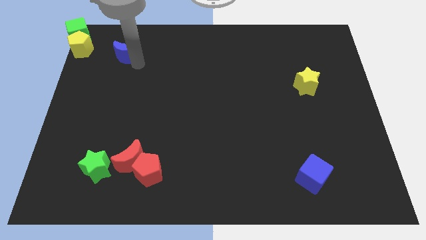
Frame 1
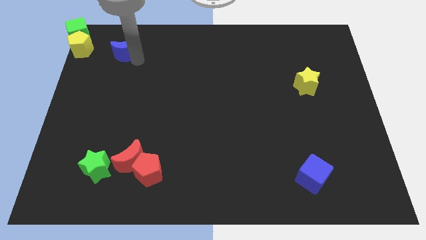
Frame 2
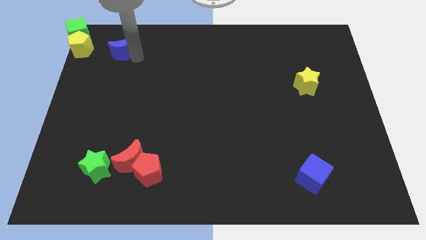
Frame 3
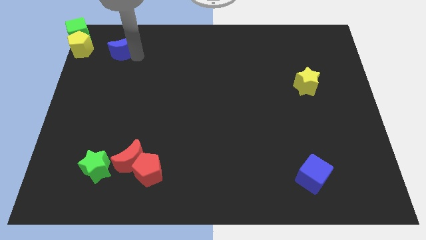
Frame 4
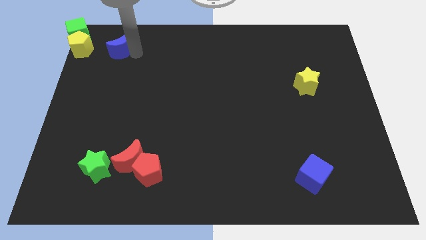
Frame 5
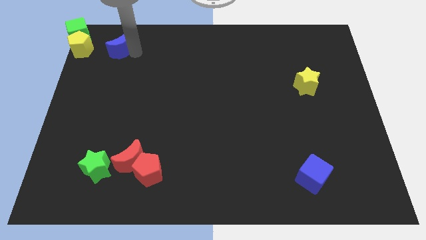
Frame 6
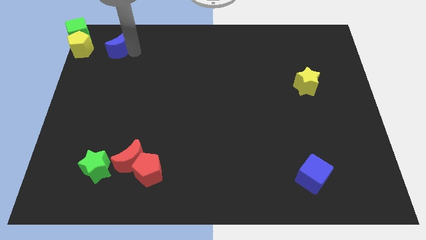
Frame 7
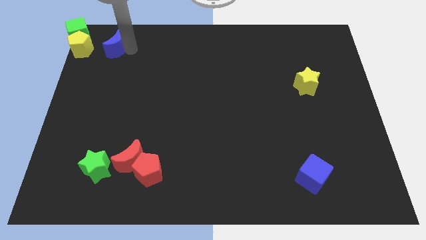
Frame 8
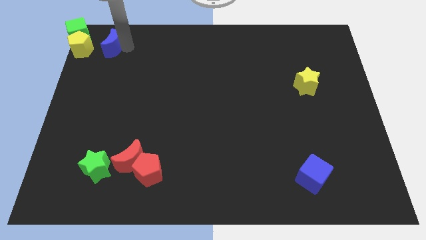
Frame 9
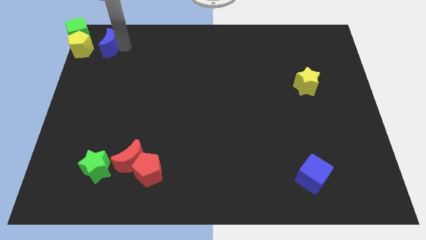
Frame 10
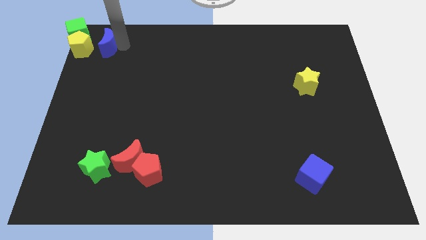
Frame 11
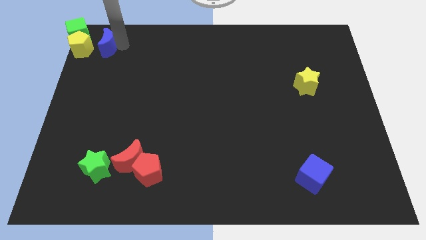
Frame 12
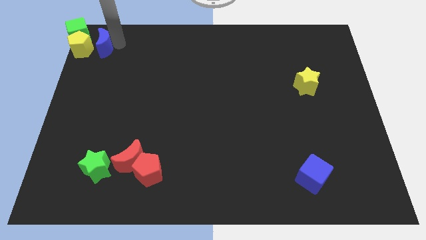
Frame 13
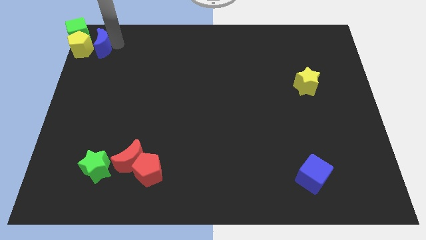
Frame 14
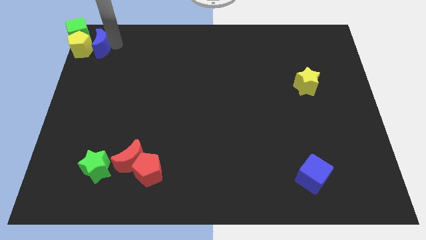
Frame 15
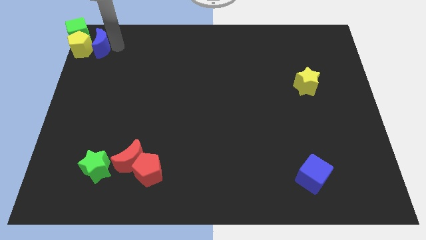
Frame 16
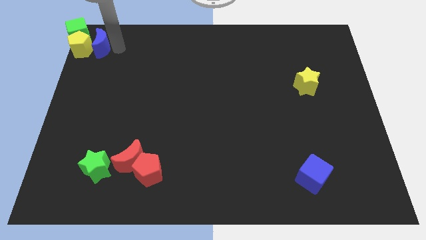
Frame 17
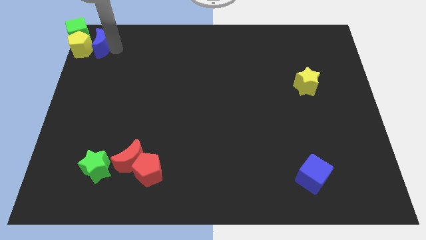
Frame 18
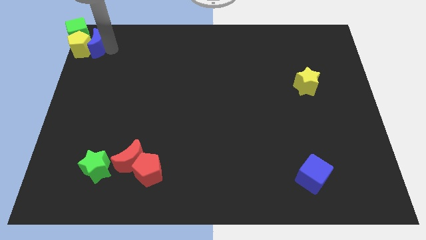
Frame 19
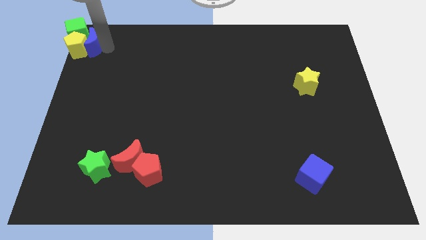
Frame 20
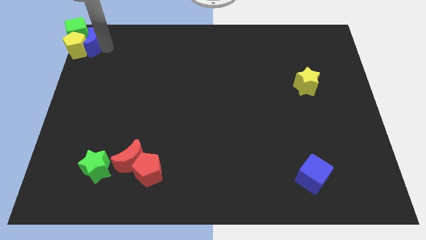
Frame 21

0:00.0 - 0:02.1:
push the blue crescent into the yellow pentagon and the green cube

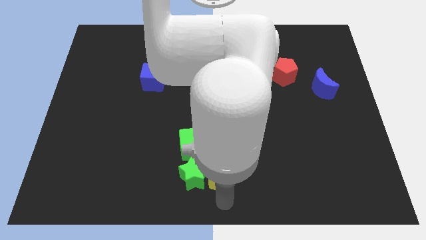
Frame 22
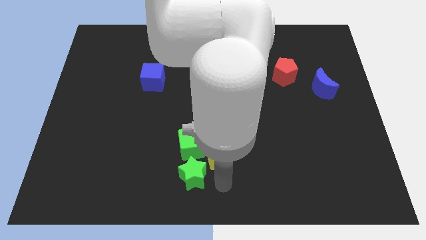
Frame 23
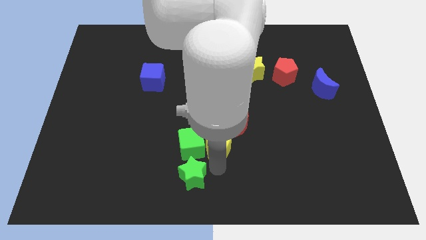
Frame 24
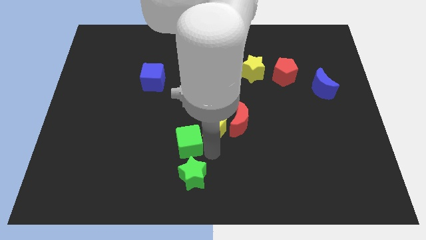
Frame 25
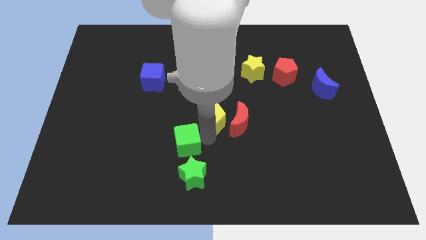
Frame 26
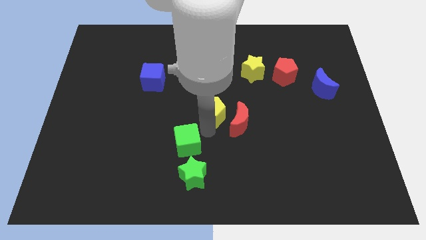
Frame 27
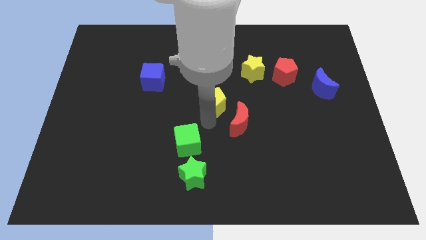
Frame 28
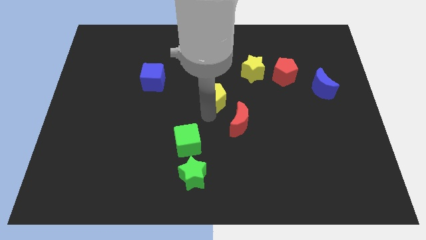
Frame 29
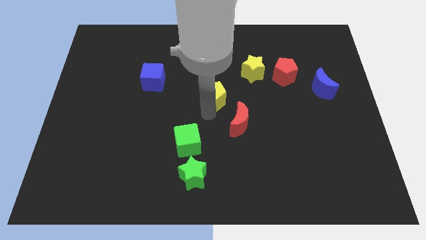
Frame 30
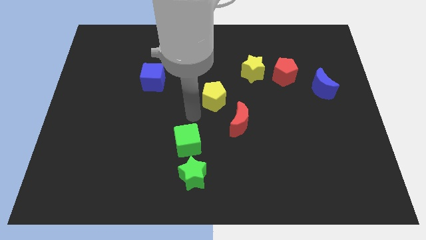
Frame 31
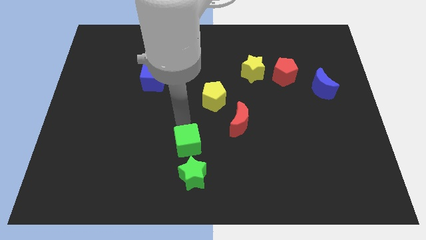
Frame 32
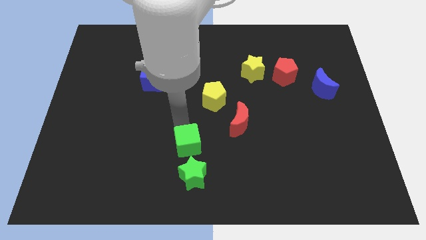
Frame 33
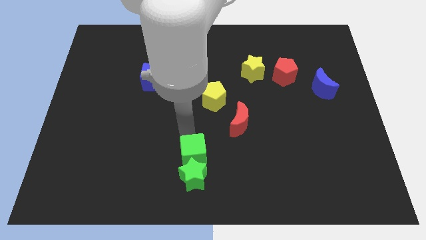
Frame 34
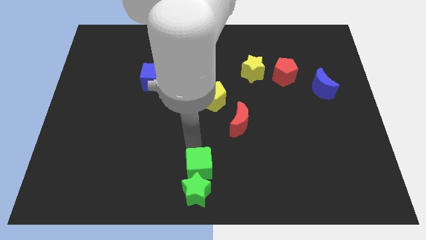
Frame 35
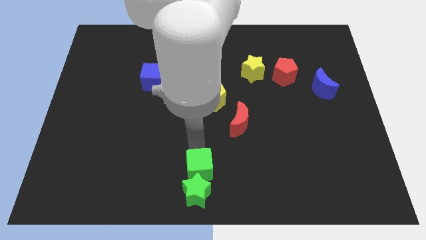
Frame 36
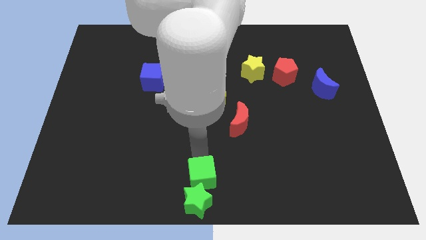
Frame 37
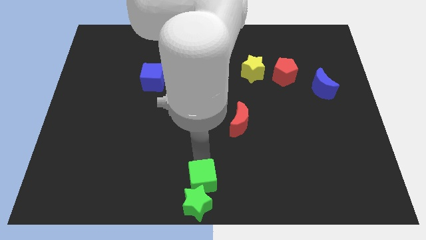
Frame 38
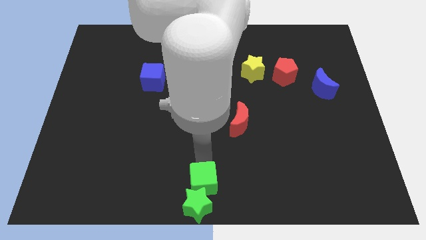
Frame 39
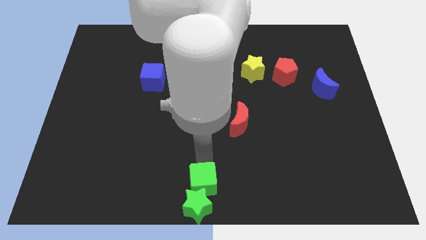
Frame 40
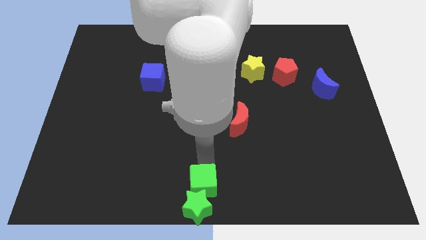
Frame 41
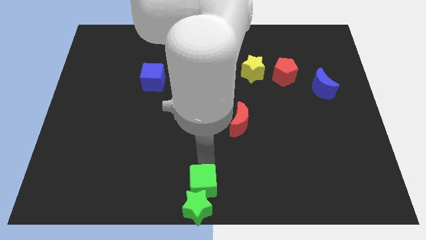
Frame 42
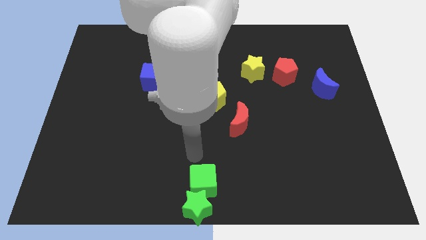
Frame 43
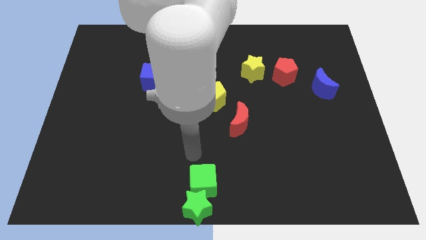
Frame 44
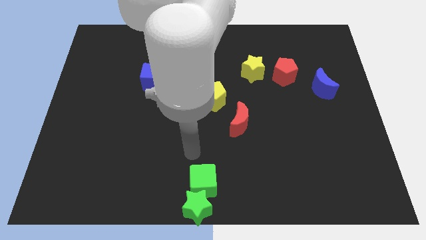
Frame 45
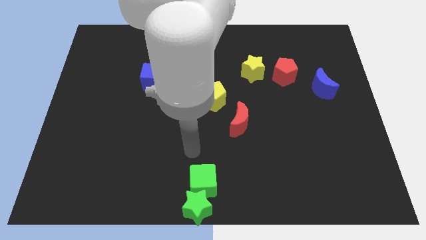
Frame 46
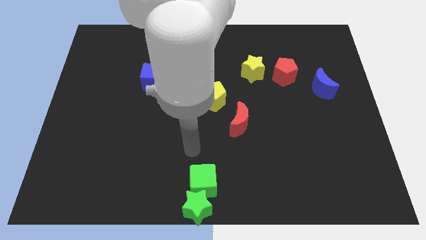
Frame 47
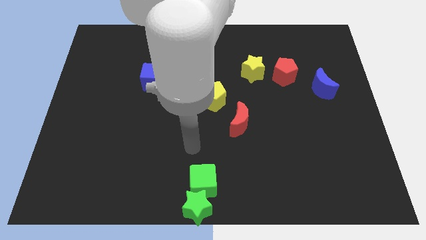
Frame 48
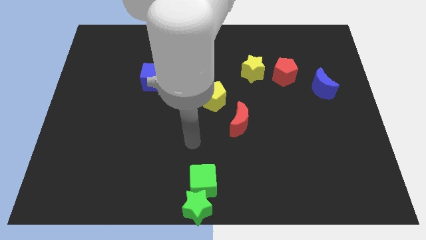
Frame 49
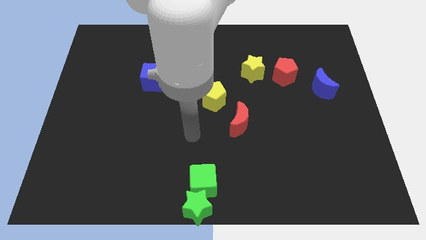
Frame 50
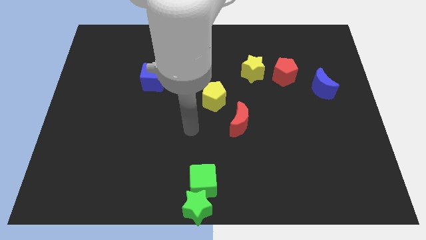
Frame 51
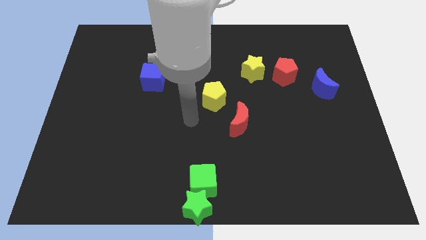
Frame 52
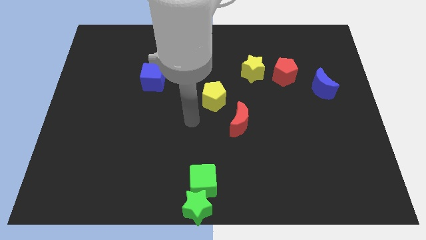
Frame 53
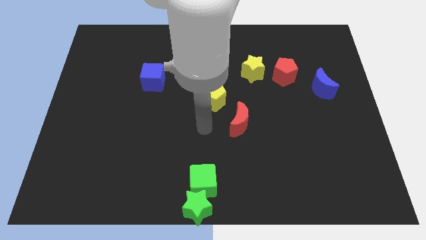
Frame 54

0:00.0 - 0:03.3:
move the yellow pentagon and the green blocks away from each other

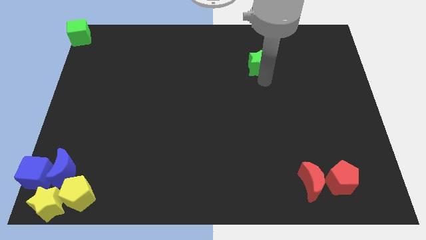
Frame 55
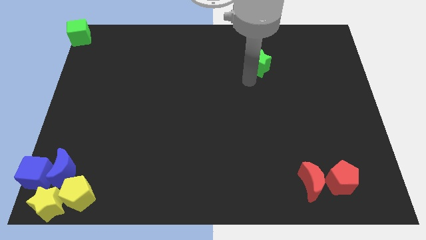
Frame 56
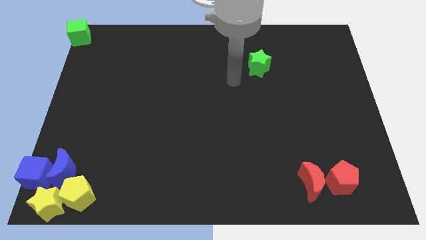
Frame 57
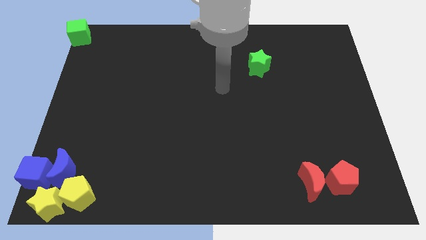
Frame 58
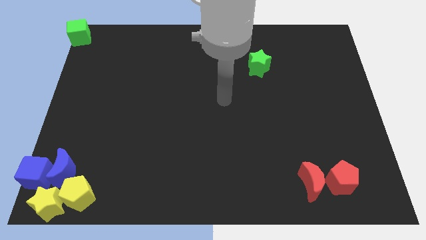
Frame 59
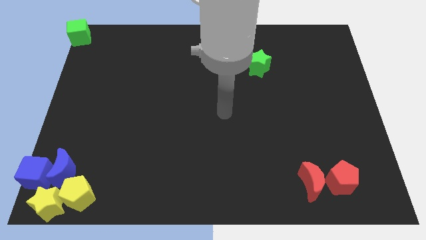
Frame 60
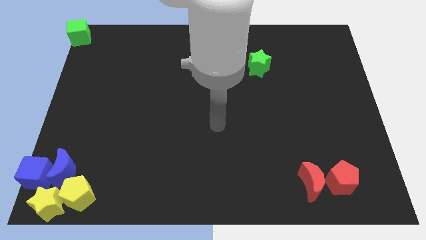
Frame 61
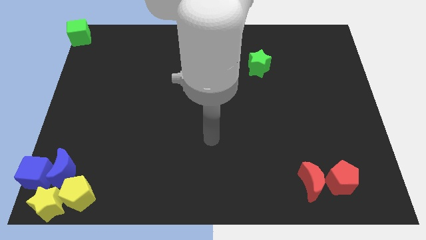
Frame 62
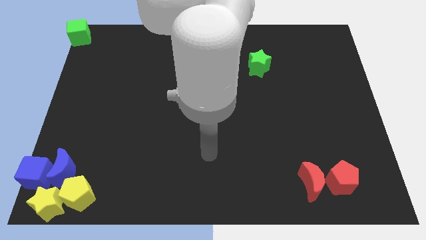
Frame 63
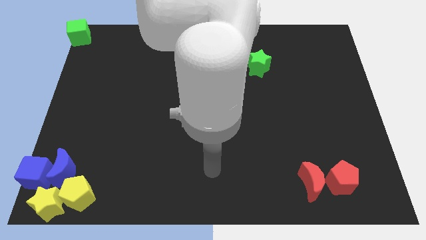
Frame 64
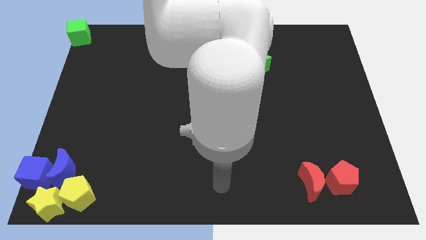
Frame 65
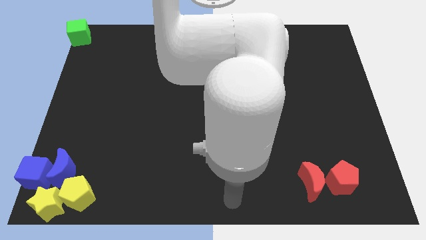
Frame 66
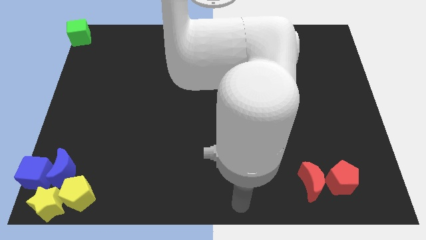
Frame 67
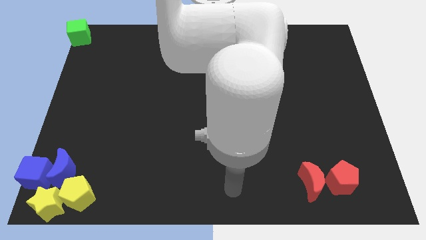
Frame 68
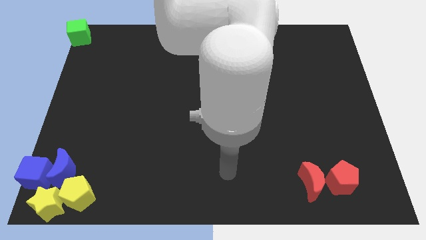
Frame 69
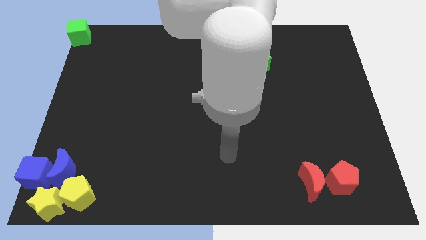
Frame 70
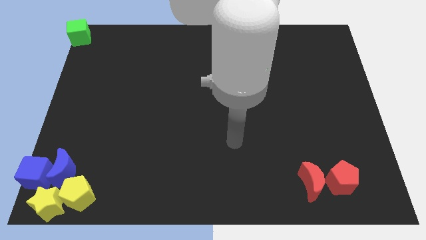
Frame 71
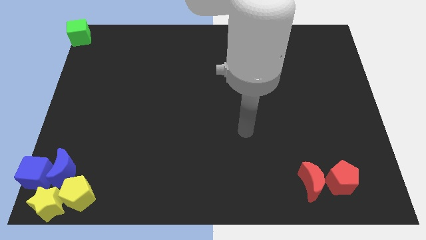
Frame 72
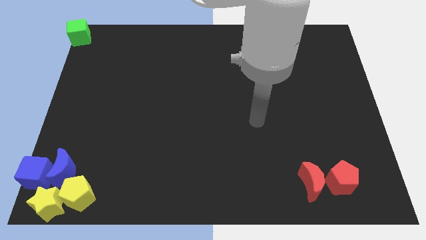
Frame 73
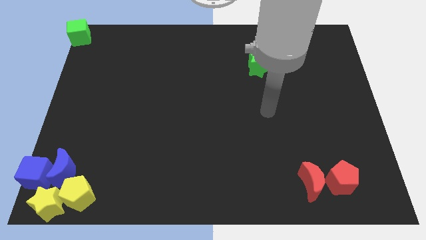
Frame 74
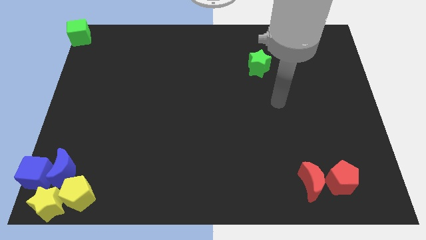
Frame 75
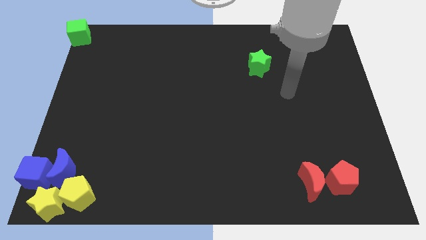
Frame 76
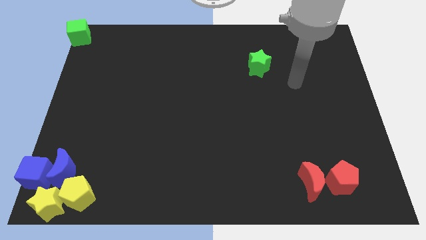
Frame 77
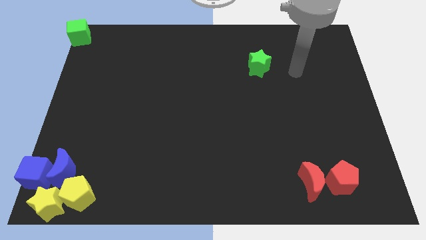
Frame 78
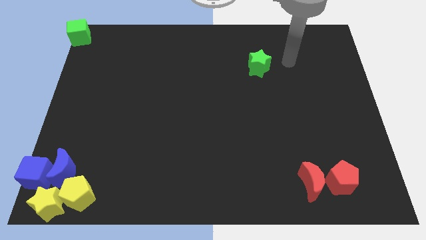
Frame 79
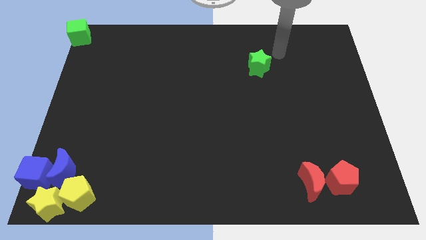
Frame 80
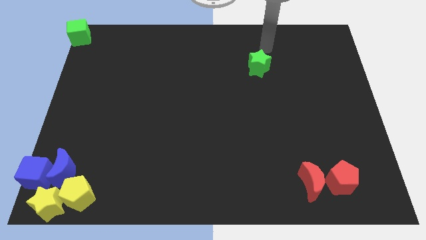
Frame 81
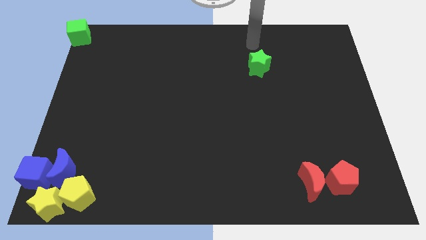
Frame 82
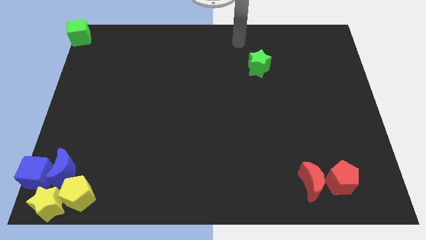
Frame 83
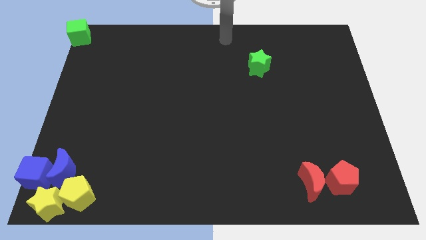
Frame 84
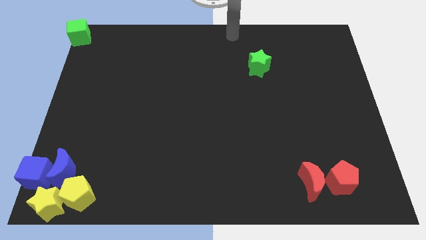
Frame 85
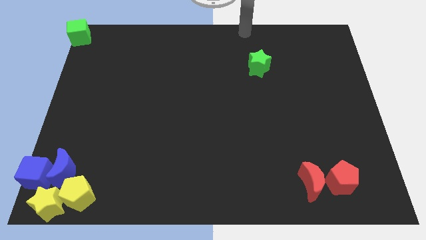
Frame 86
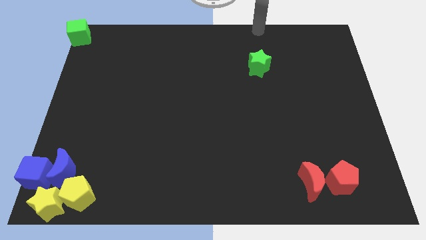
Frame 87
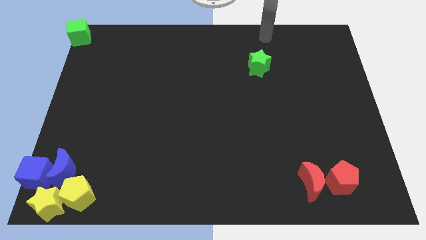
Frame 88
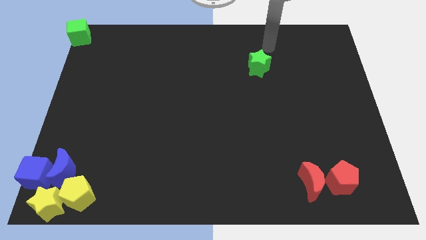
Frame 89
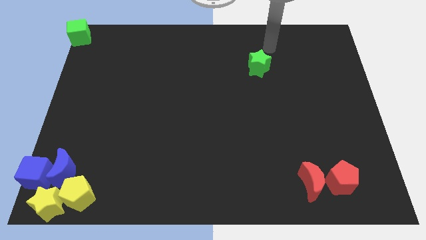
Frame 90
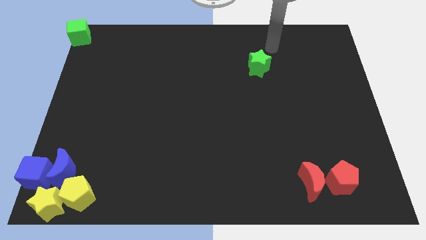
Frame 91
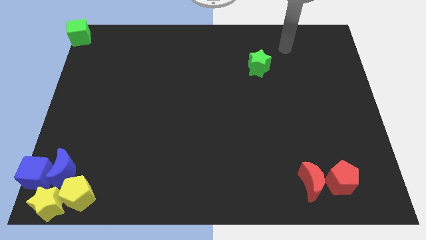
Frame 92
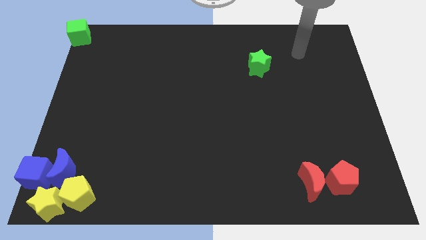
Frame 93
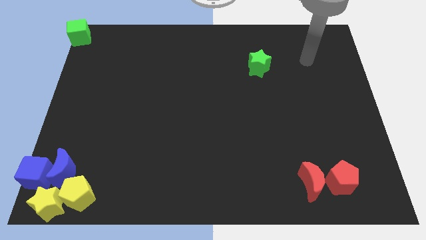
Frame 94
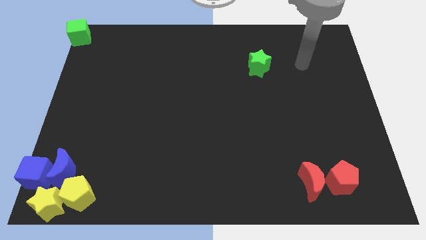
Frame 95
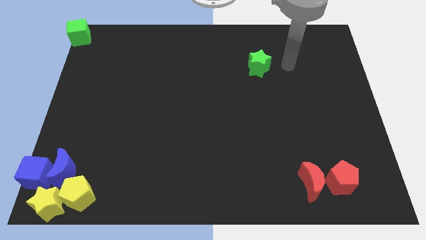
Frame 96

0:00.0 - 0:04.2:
point your arm at the right side of the green star
